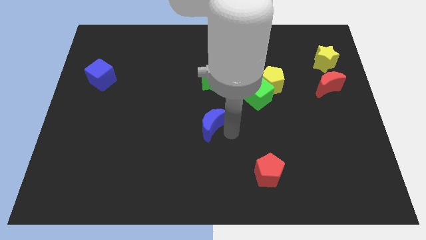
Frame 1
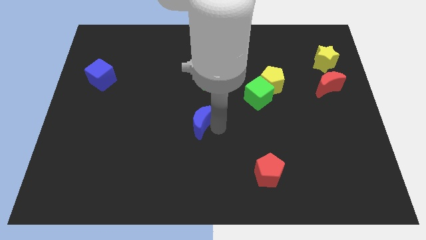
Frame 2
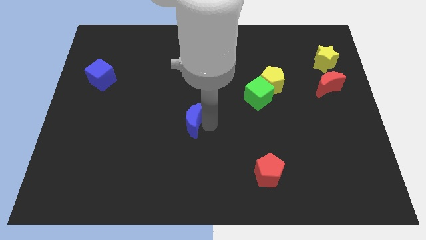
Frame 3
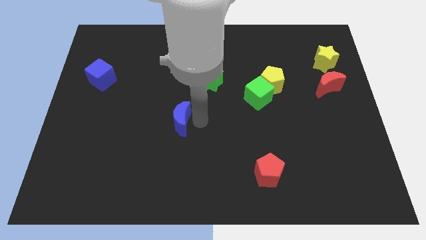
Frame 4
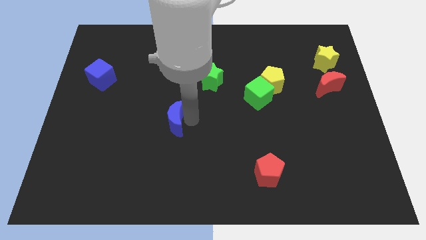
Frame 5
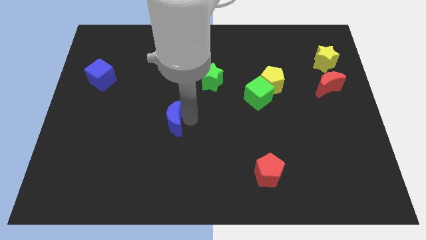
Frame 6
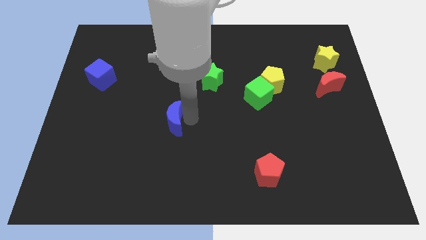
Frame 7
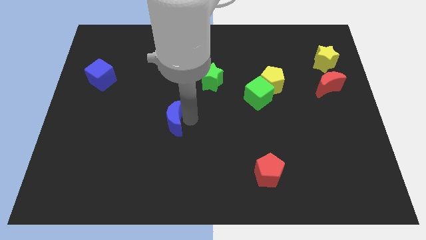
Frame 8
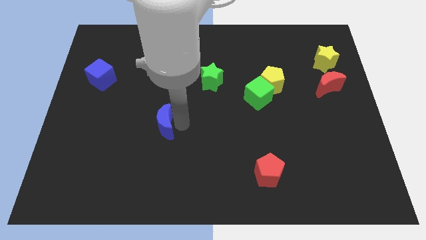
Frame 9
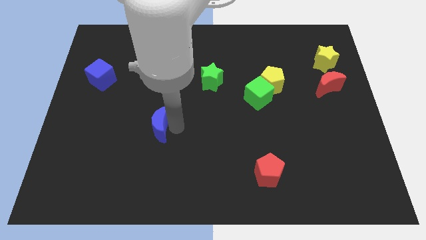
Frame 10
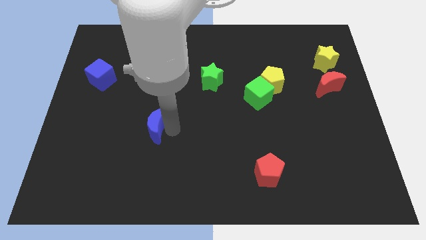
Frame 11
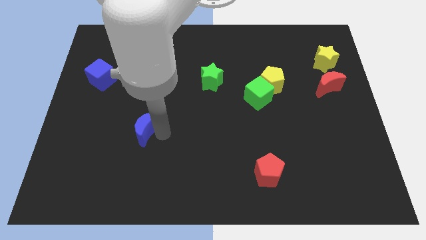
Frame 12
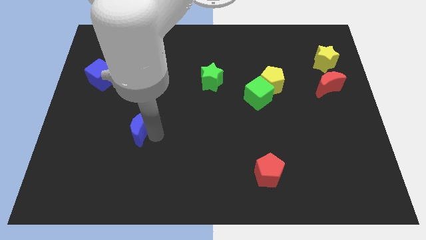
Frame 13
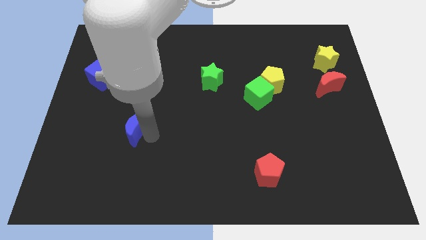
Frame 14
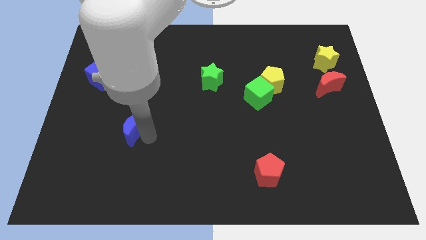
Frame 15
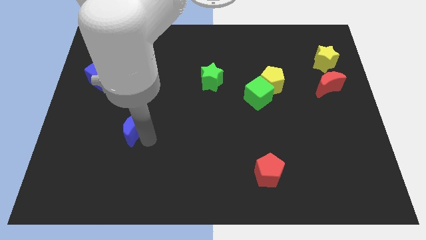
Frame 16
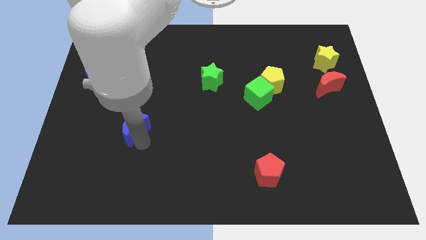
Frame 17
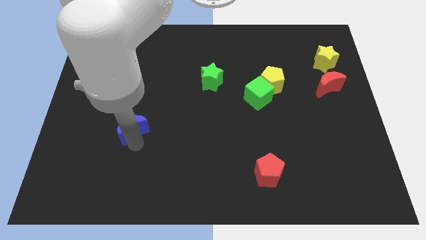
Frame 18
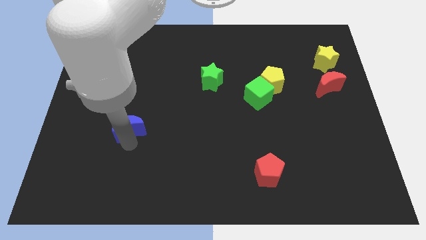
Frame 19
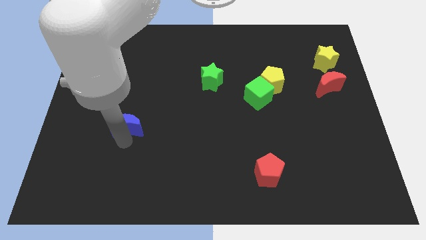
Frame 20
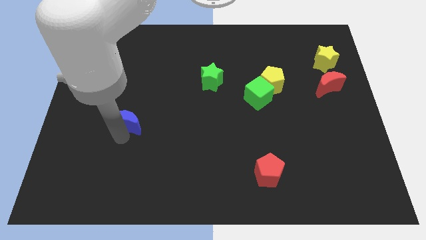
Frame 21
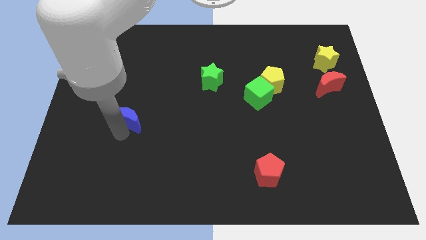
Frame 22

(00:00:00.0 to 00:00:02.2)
push the blue moon towards the left side of the board

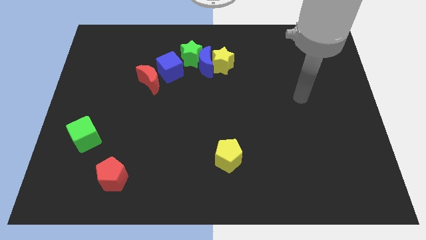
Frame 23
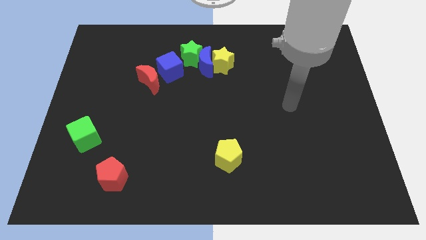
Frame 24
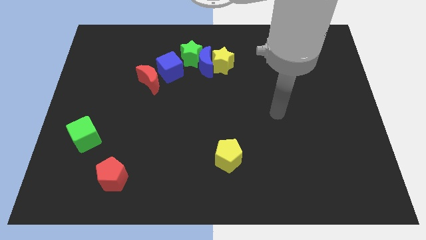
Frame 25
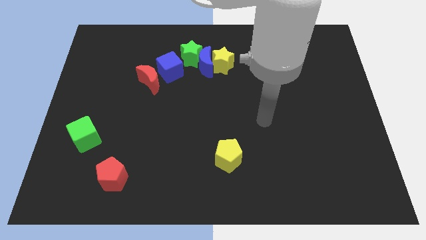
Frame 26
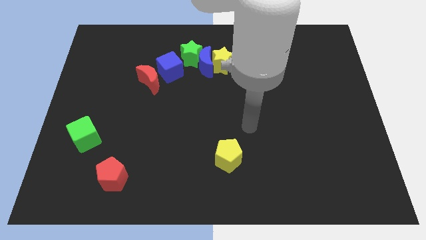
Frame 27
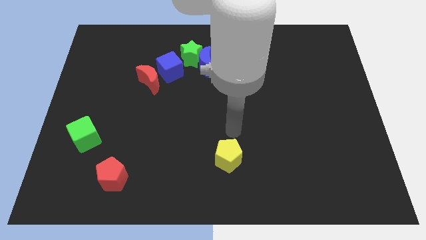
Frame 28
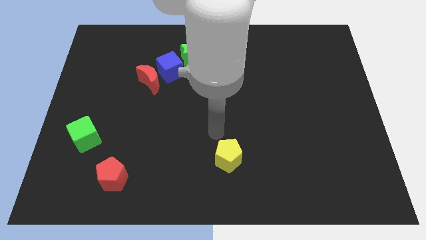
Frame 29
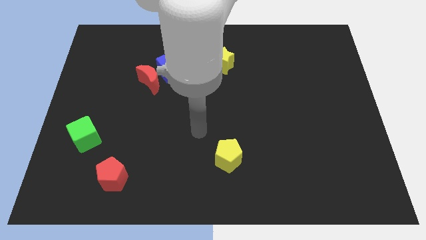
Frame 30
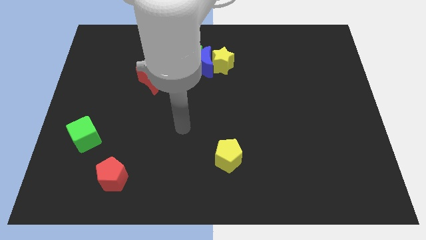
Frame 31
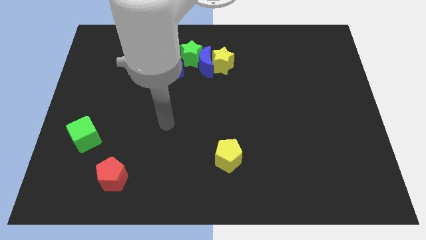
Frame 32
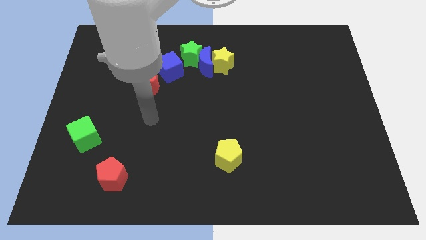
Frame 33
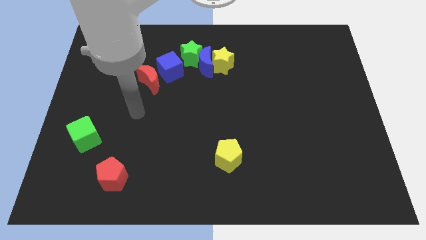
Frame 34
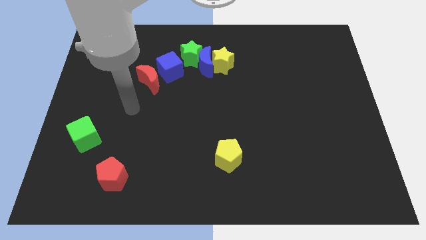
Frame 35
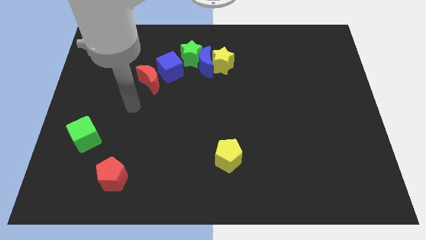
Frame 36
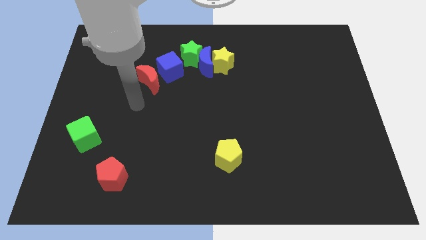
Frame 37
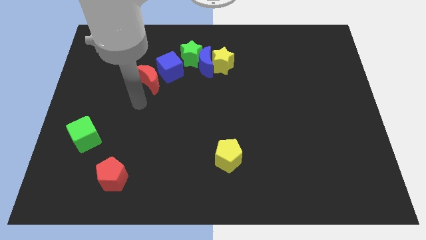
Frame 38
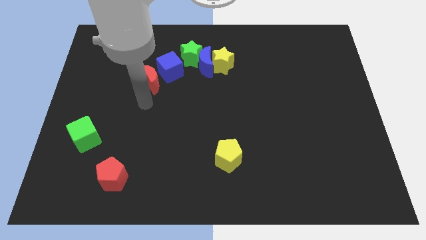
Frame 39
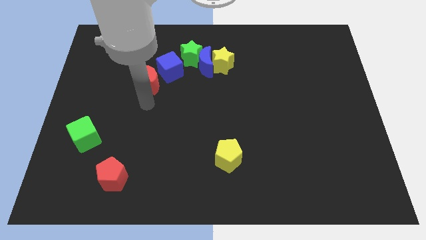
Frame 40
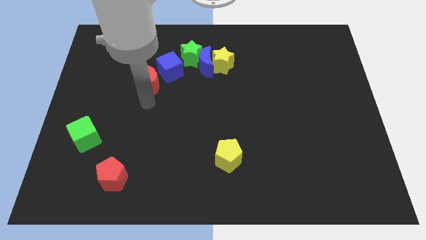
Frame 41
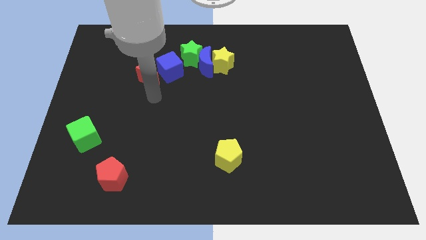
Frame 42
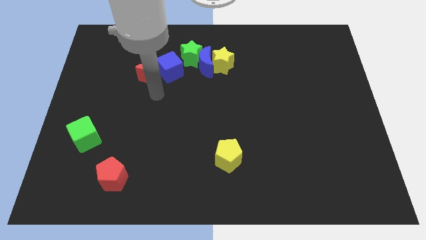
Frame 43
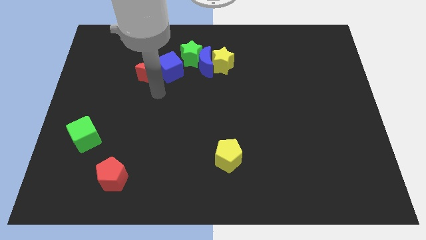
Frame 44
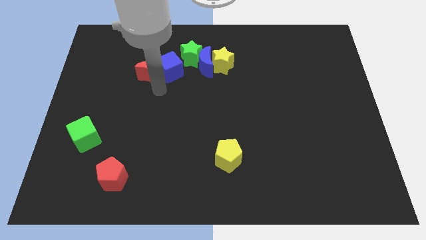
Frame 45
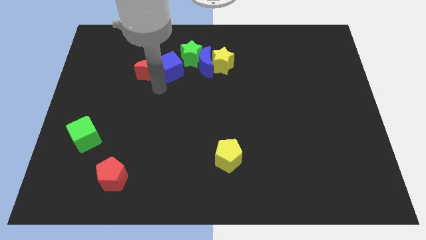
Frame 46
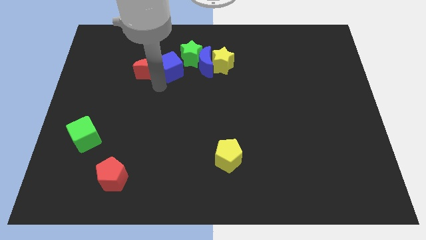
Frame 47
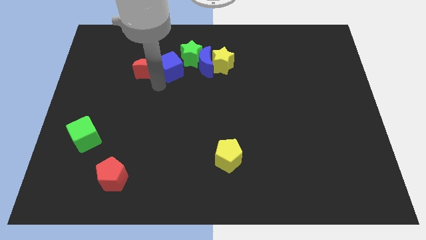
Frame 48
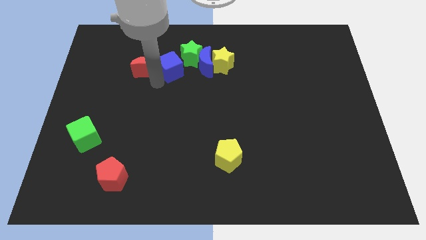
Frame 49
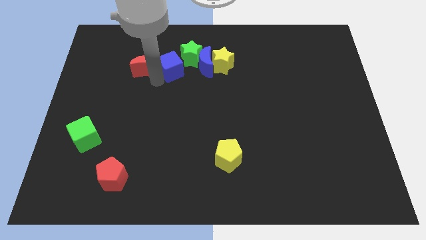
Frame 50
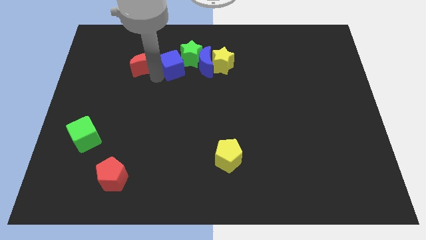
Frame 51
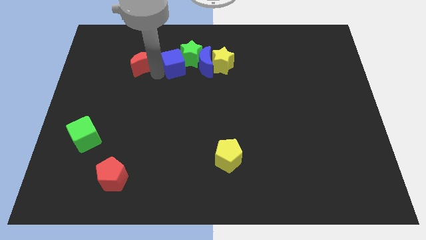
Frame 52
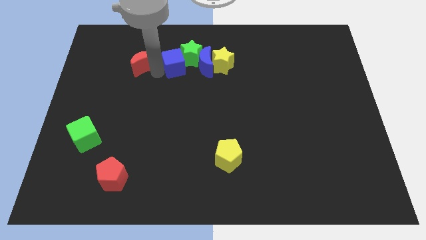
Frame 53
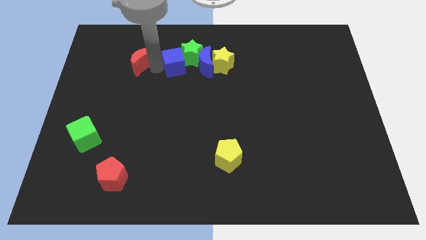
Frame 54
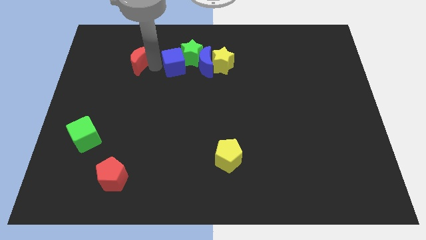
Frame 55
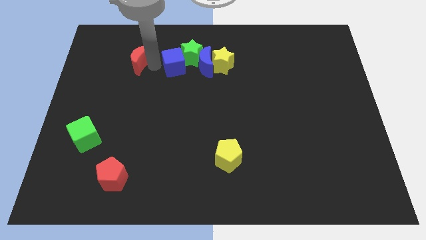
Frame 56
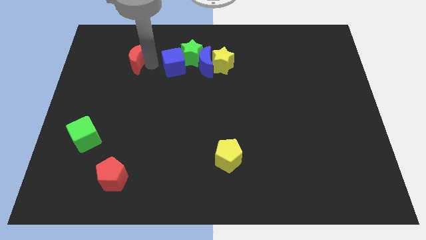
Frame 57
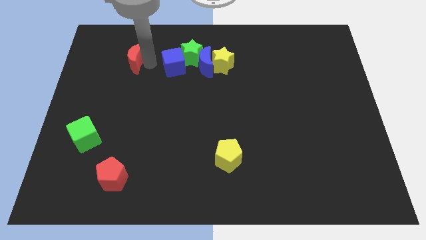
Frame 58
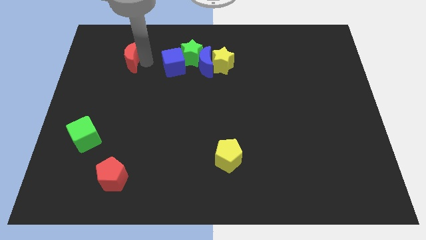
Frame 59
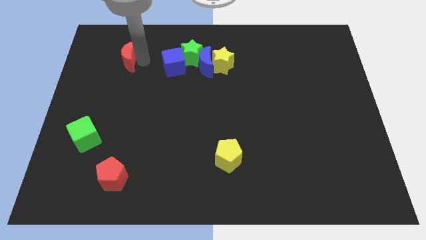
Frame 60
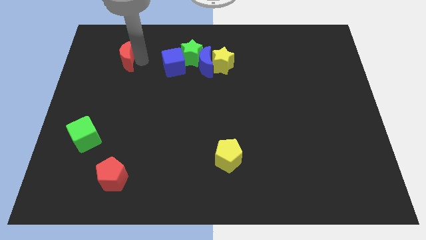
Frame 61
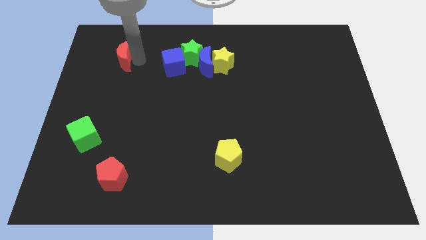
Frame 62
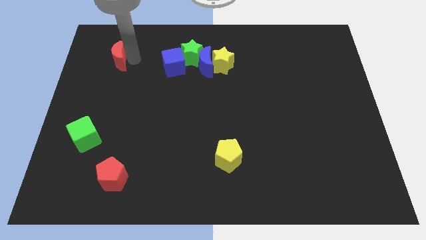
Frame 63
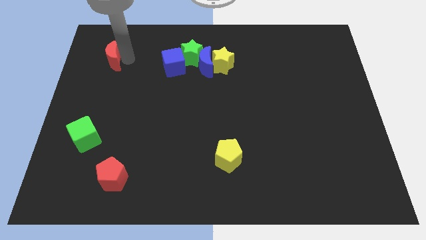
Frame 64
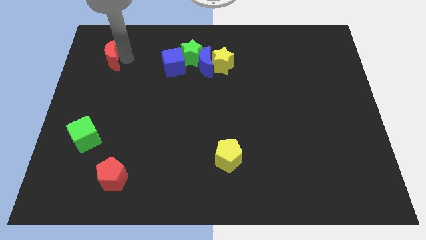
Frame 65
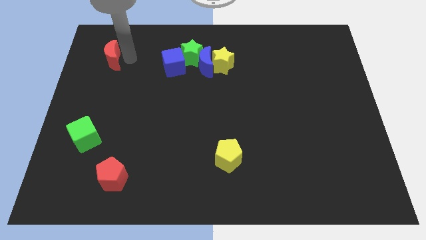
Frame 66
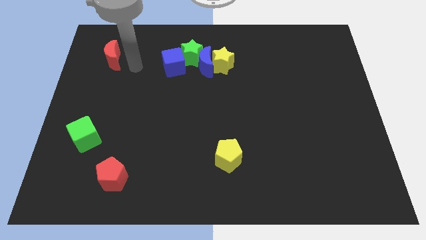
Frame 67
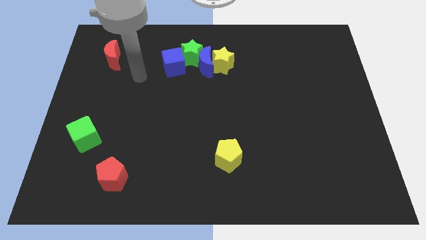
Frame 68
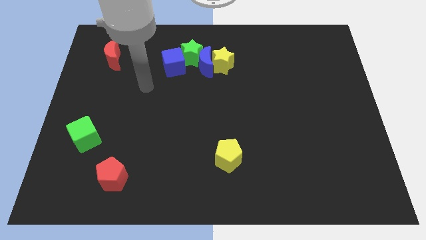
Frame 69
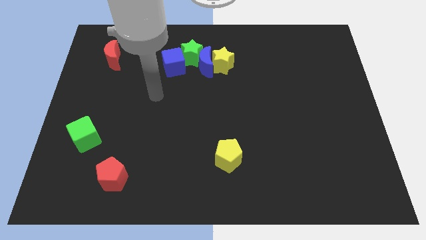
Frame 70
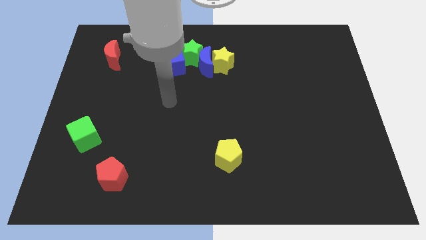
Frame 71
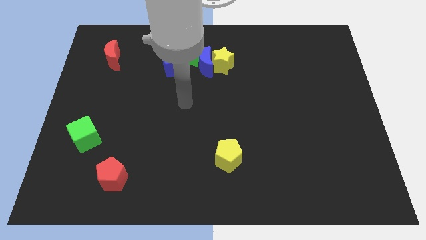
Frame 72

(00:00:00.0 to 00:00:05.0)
separate the red crescent from blue cube

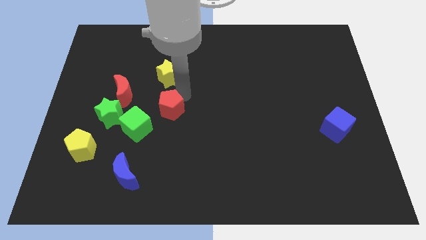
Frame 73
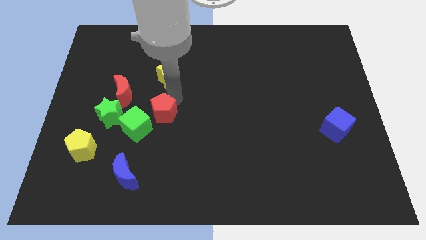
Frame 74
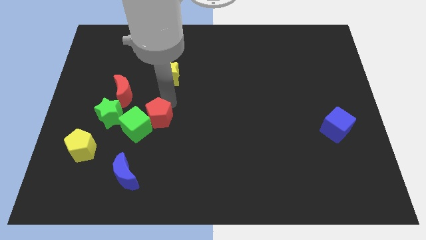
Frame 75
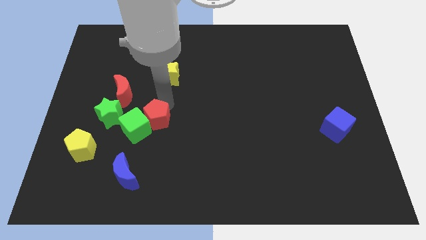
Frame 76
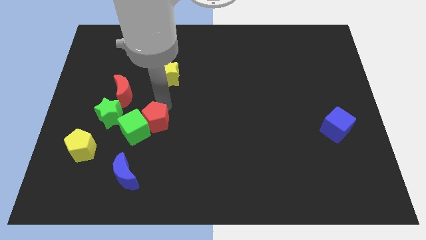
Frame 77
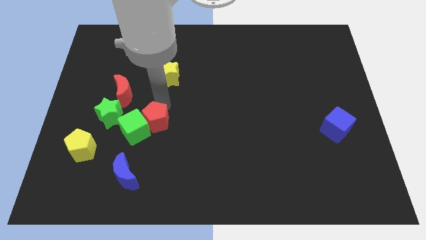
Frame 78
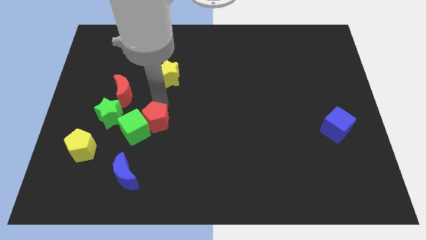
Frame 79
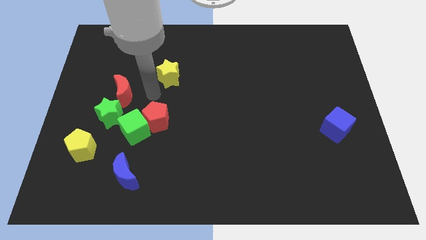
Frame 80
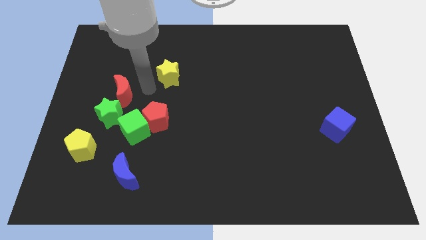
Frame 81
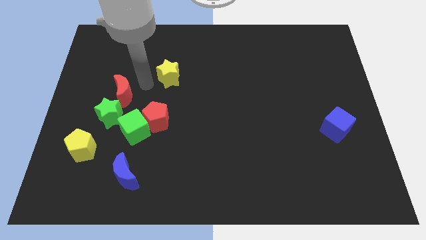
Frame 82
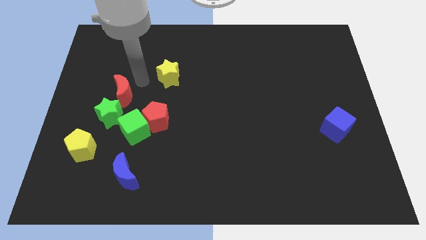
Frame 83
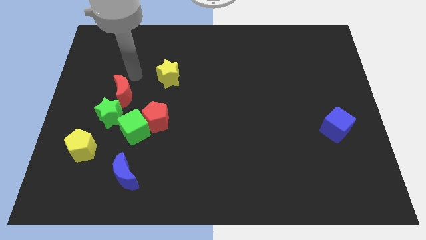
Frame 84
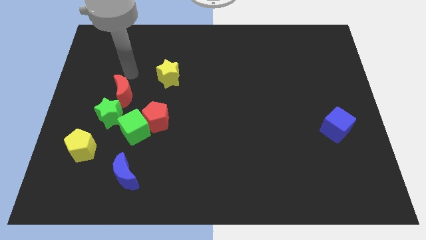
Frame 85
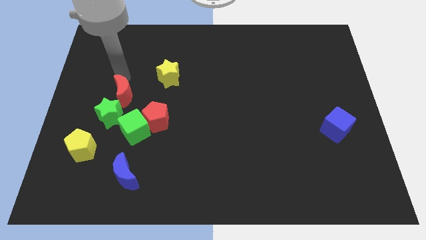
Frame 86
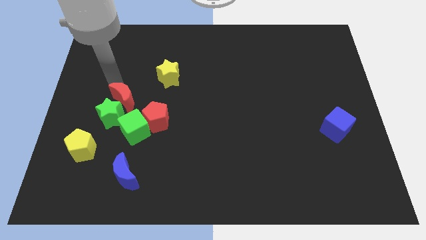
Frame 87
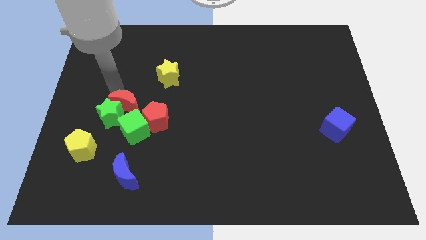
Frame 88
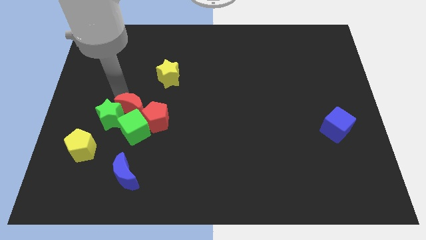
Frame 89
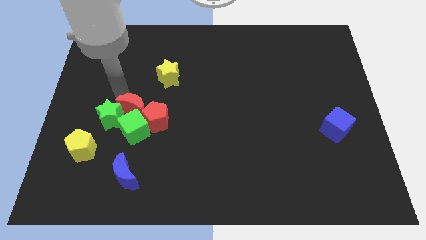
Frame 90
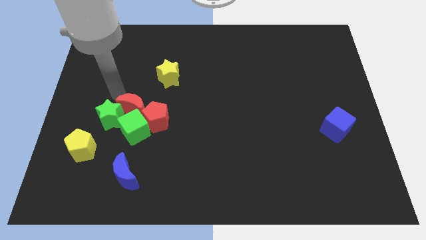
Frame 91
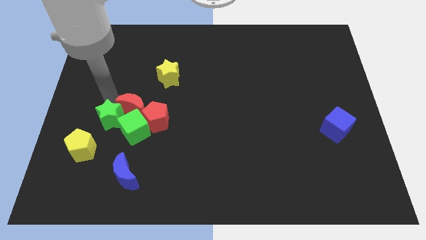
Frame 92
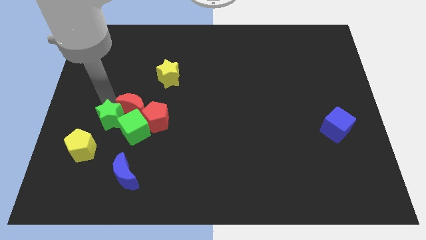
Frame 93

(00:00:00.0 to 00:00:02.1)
place the red pentagon towards the top right of the green cube
